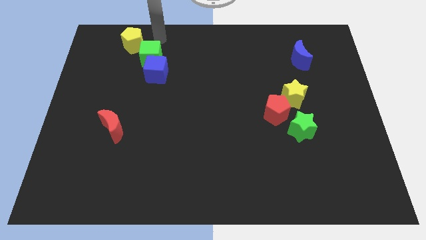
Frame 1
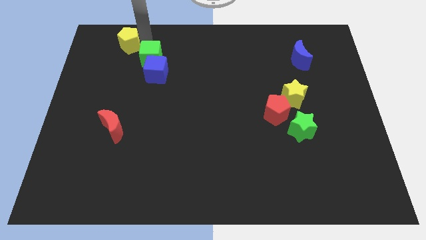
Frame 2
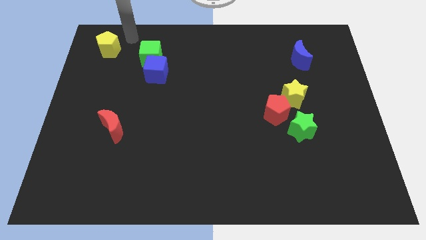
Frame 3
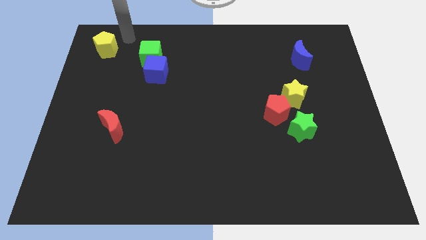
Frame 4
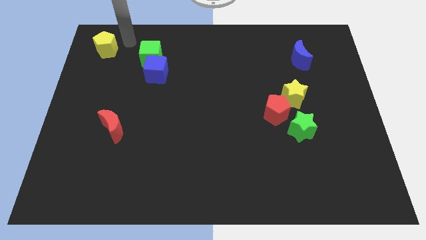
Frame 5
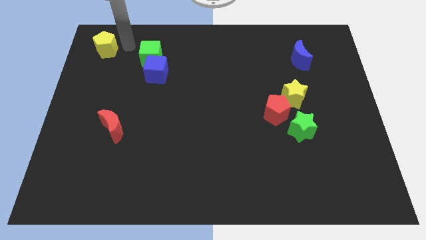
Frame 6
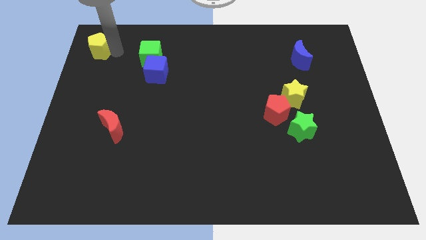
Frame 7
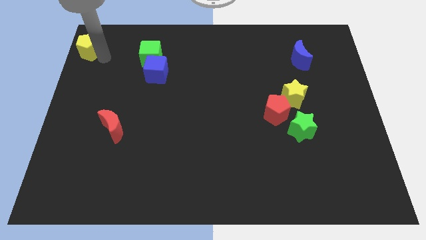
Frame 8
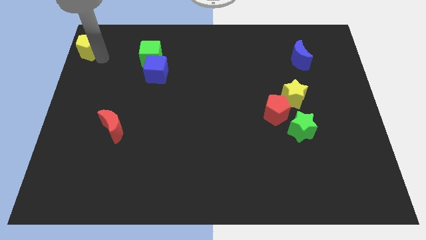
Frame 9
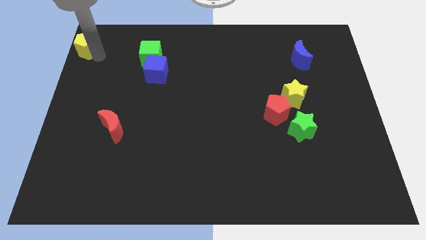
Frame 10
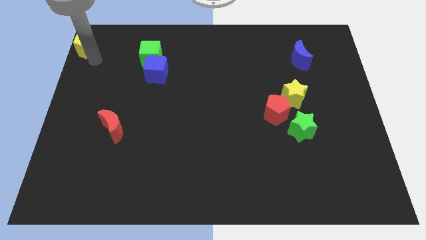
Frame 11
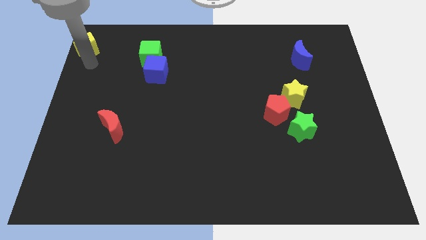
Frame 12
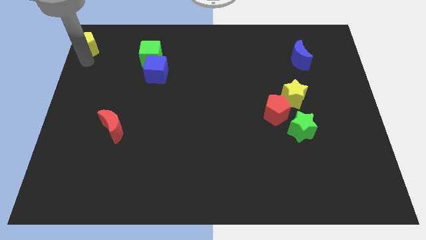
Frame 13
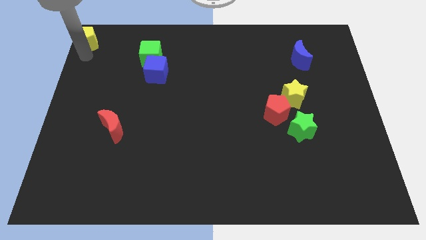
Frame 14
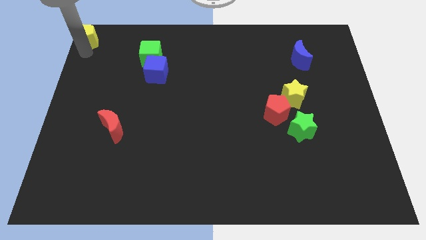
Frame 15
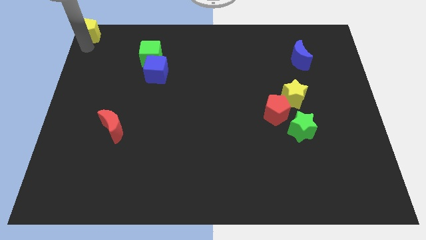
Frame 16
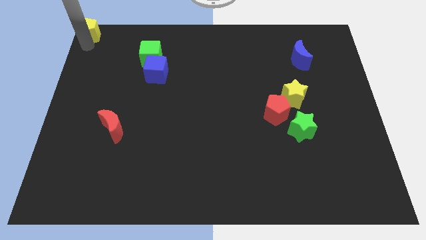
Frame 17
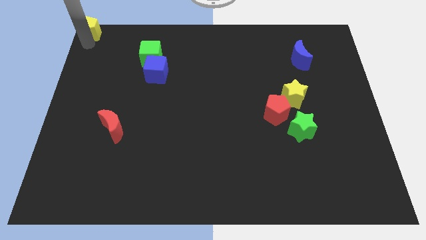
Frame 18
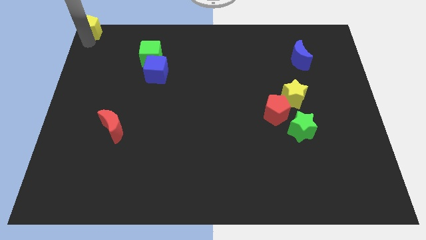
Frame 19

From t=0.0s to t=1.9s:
move the yellow pentagon to the top left corner

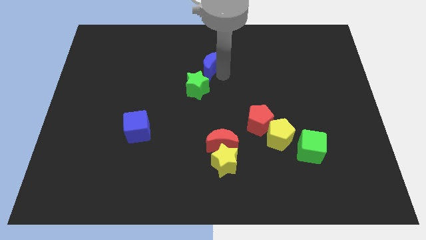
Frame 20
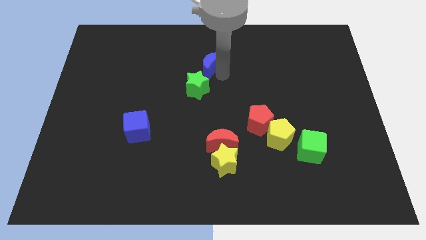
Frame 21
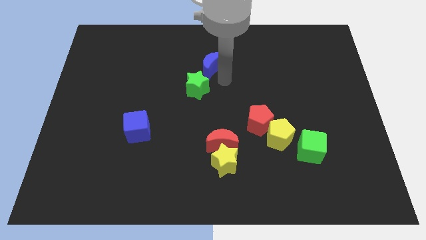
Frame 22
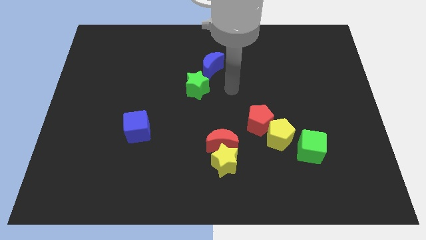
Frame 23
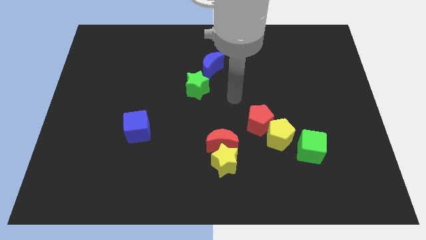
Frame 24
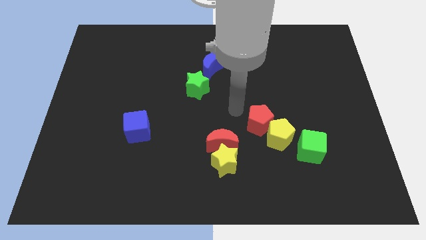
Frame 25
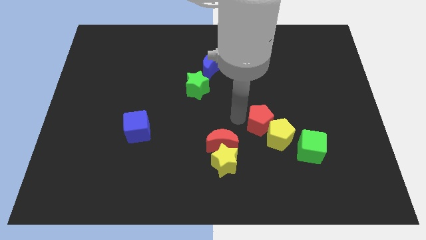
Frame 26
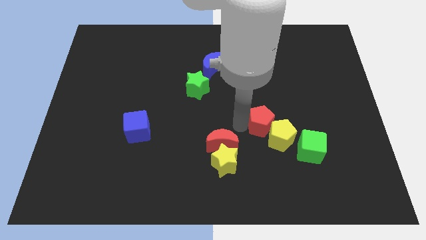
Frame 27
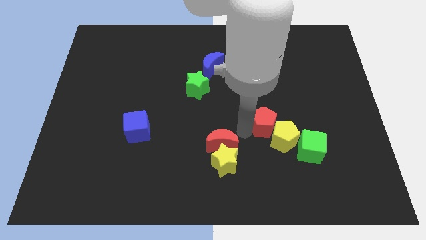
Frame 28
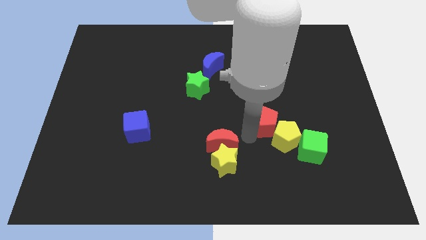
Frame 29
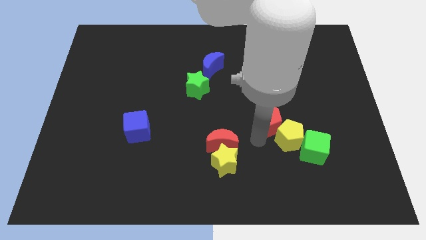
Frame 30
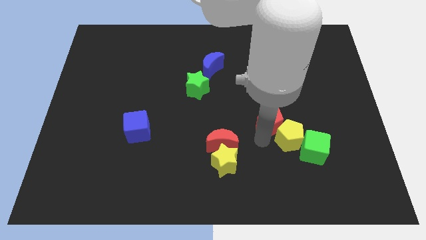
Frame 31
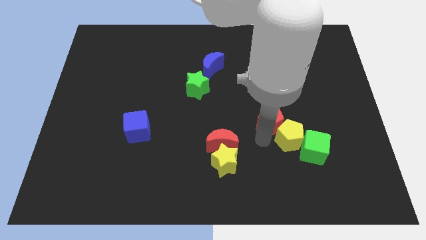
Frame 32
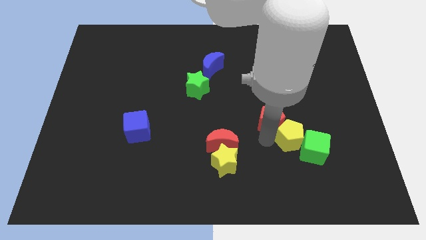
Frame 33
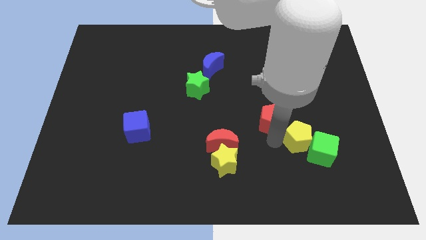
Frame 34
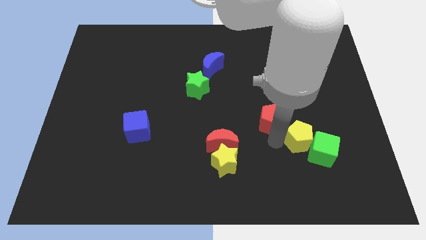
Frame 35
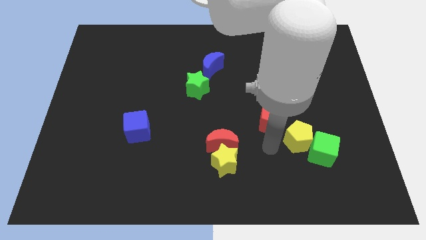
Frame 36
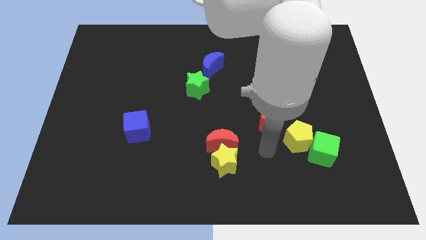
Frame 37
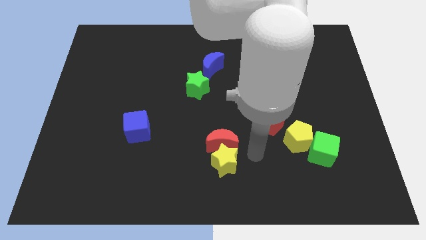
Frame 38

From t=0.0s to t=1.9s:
separate the red pentagon from yellow pentagon

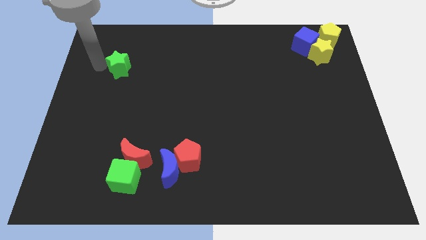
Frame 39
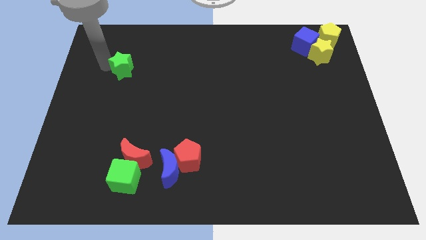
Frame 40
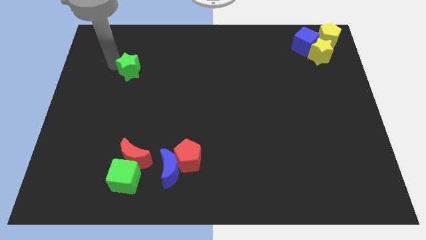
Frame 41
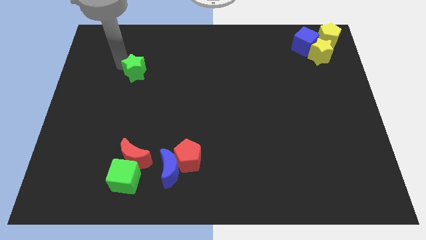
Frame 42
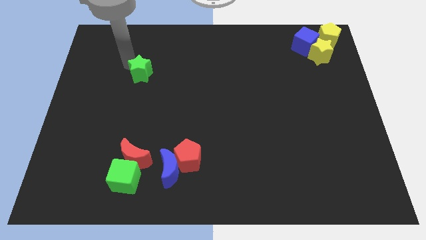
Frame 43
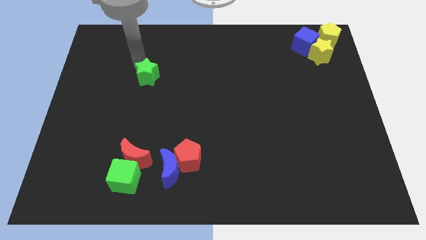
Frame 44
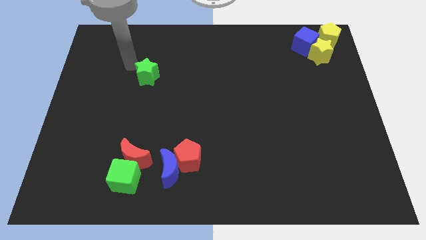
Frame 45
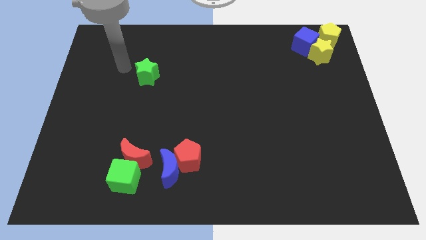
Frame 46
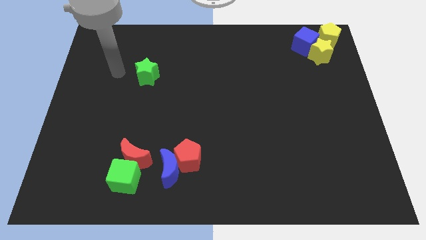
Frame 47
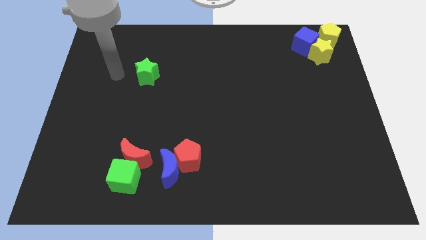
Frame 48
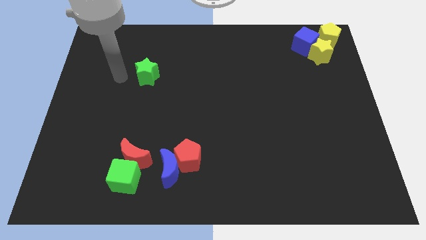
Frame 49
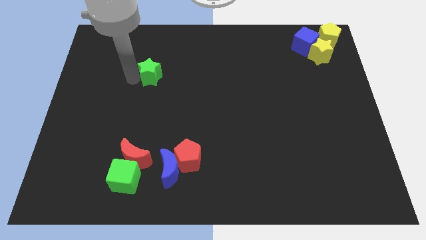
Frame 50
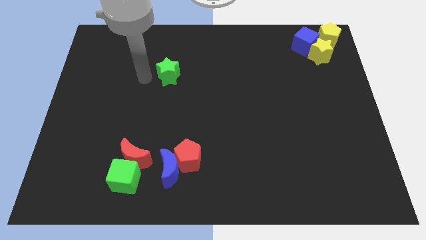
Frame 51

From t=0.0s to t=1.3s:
move the green star to the right of the board

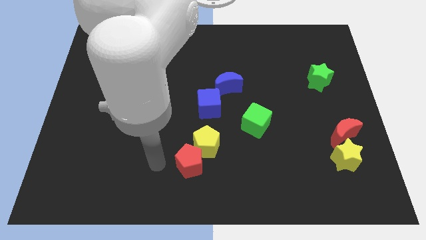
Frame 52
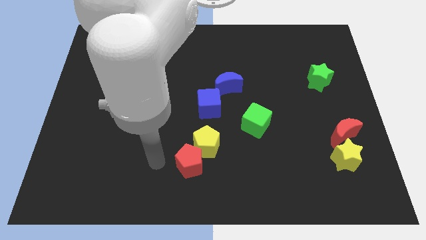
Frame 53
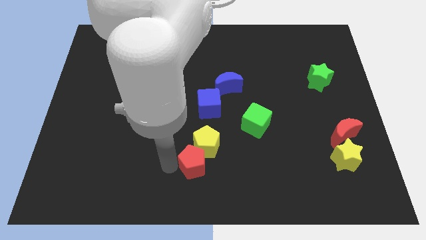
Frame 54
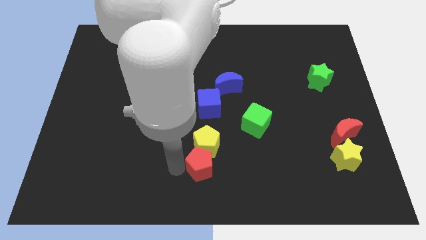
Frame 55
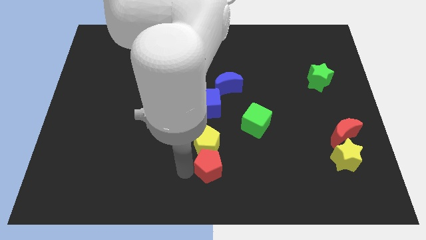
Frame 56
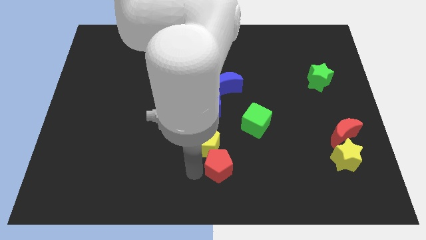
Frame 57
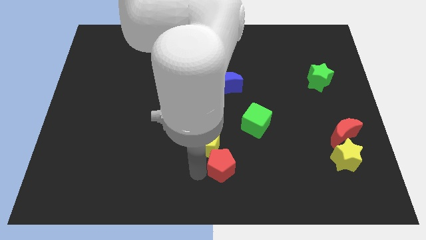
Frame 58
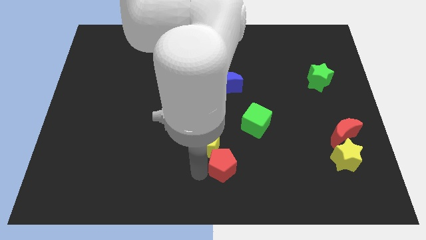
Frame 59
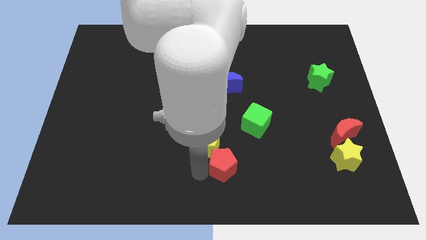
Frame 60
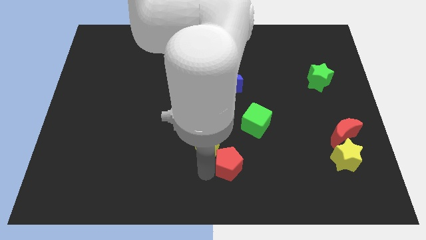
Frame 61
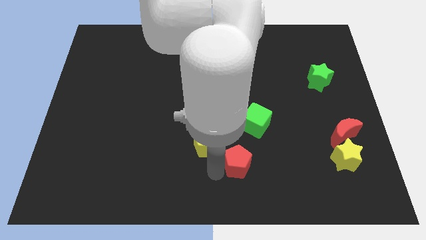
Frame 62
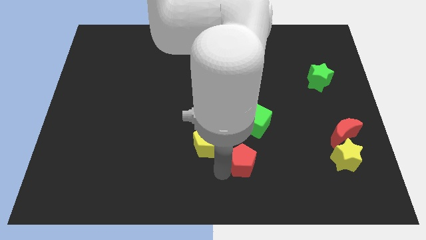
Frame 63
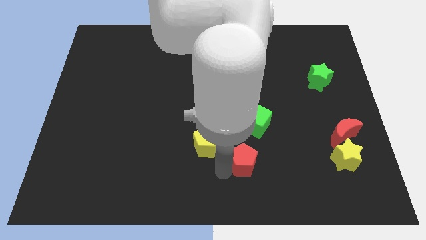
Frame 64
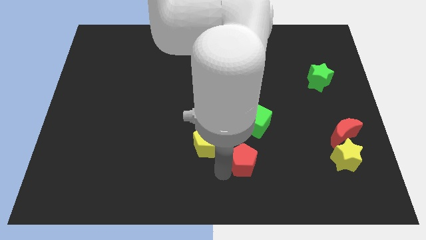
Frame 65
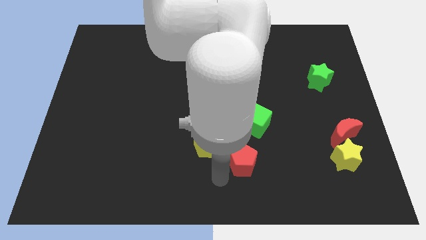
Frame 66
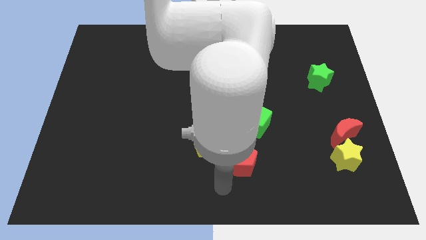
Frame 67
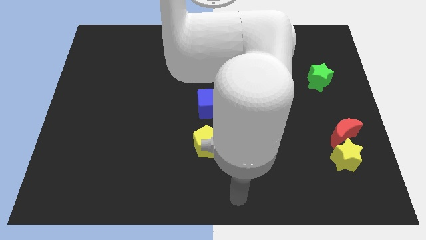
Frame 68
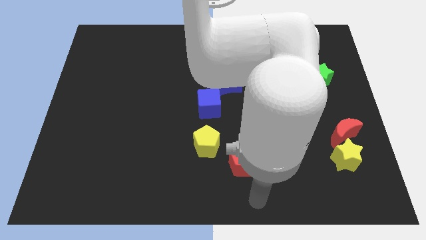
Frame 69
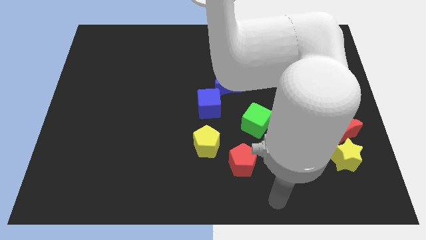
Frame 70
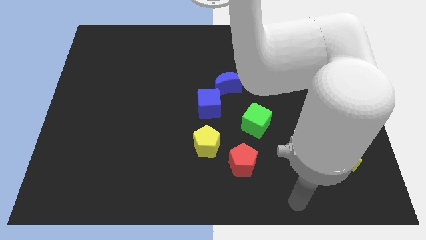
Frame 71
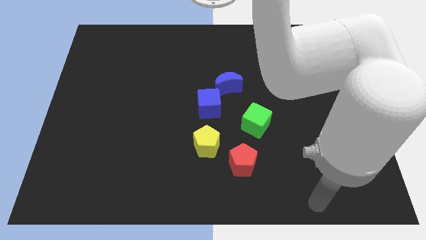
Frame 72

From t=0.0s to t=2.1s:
separate the red pentagon from the yellow pentagon

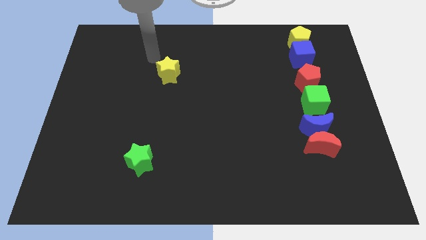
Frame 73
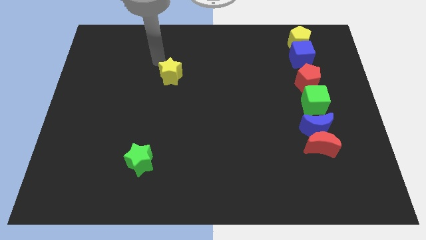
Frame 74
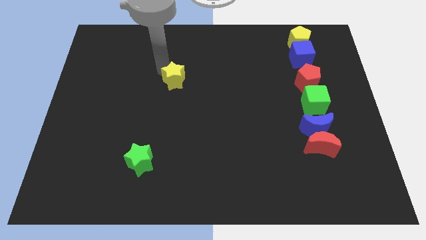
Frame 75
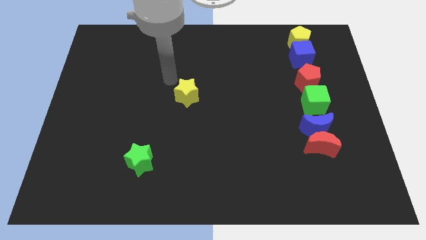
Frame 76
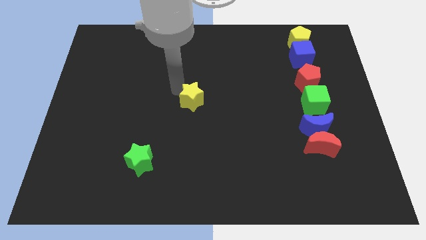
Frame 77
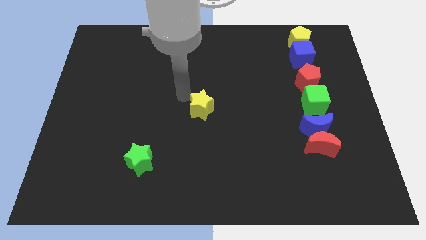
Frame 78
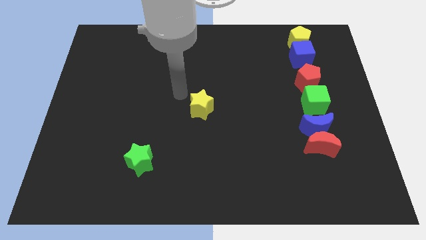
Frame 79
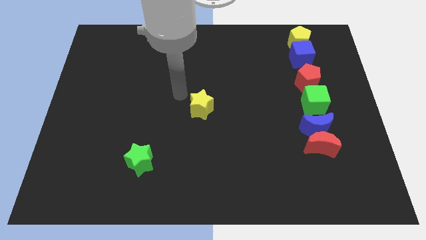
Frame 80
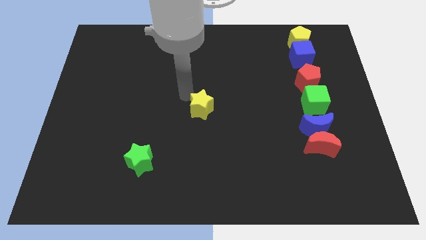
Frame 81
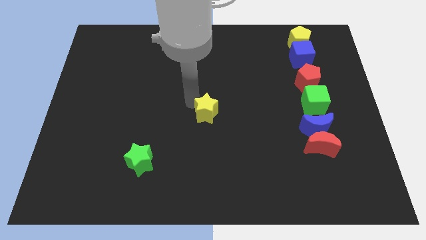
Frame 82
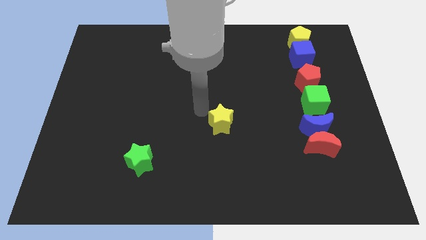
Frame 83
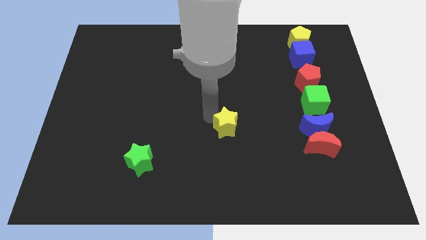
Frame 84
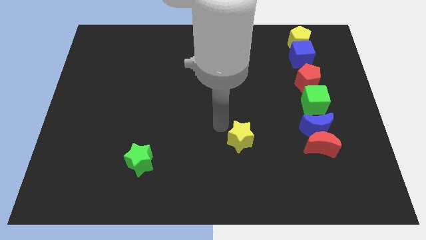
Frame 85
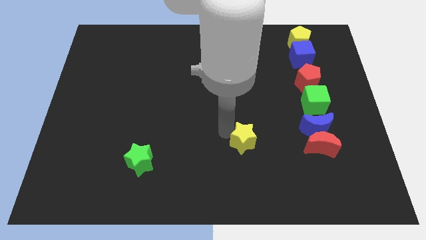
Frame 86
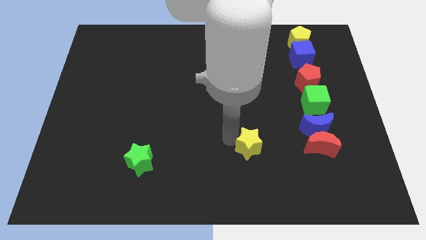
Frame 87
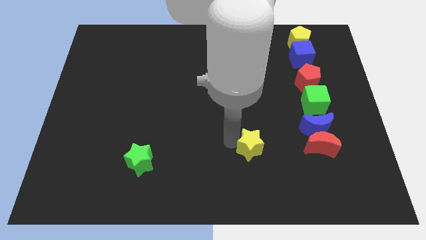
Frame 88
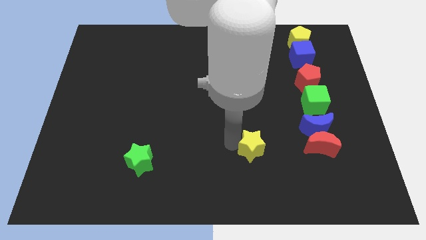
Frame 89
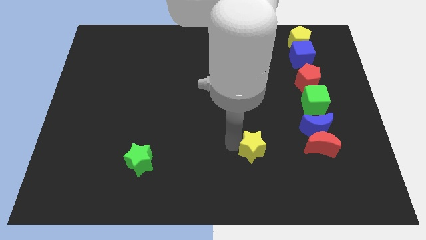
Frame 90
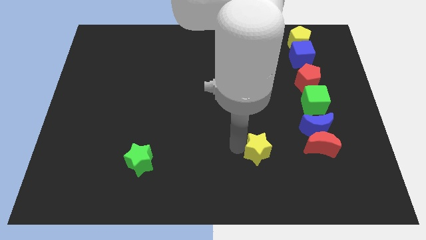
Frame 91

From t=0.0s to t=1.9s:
place the yellow star parallel left to the red crescent
